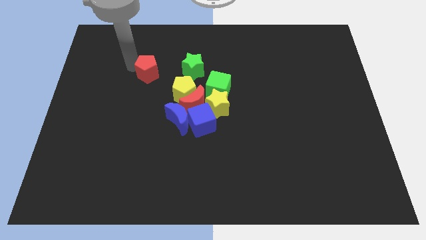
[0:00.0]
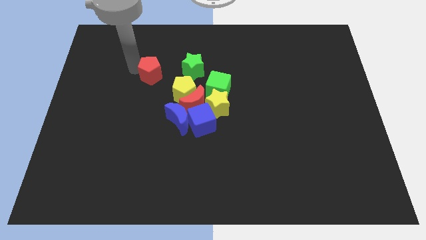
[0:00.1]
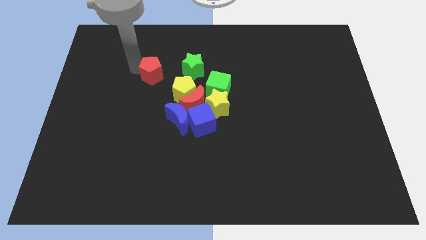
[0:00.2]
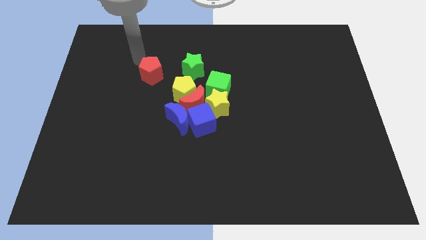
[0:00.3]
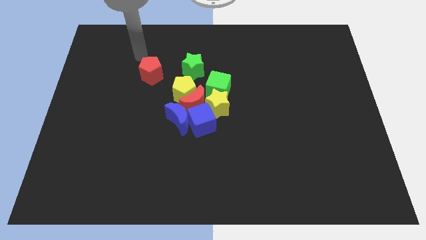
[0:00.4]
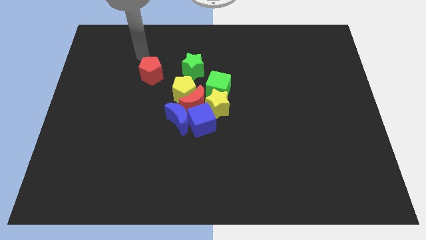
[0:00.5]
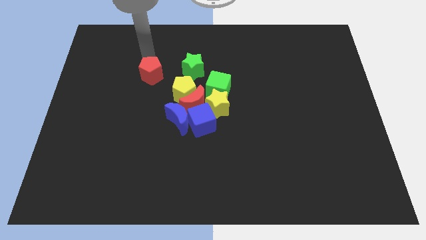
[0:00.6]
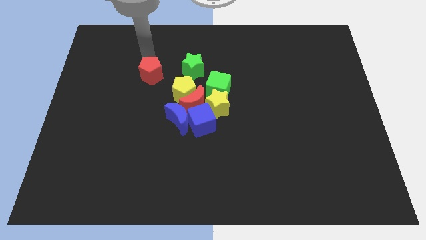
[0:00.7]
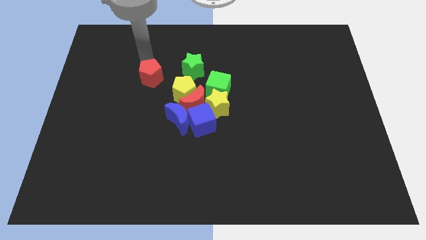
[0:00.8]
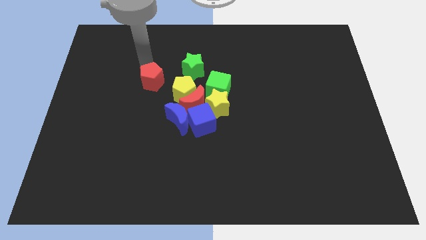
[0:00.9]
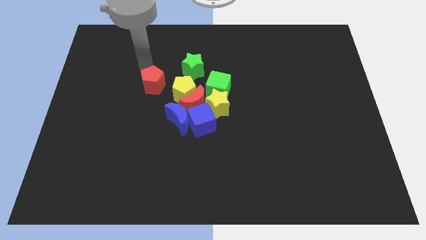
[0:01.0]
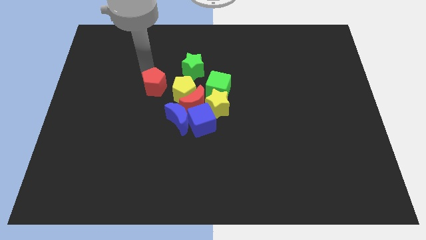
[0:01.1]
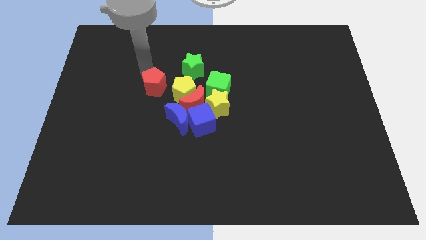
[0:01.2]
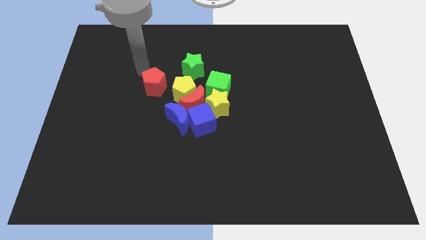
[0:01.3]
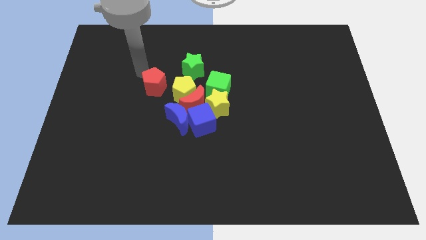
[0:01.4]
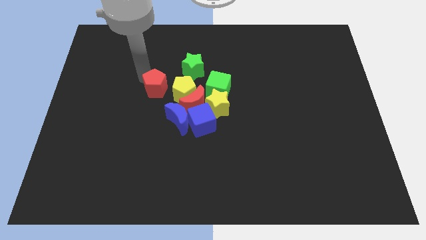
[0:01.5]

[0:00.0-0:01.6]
slide the red pentagon towards the left side of the yellow pentagon

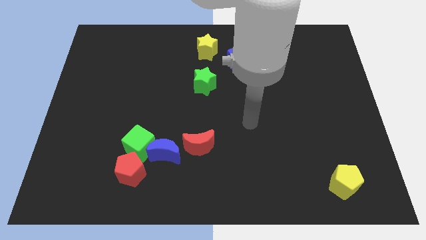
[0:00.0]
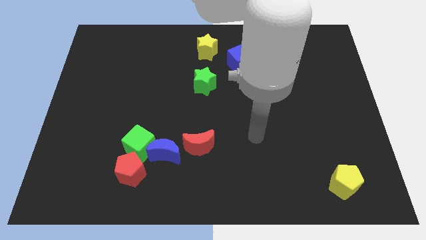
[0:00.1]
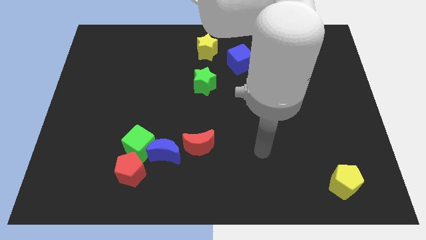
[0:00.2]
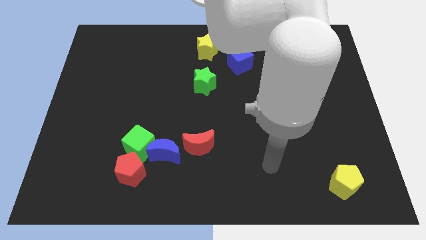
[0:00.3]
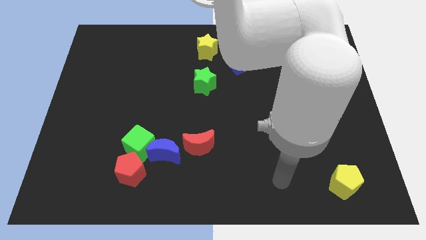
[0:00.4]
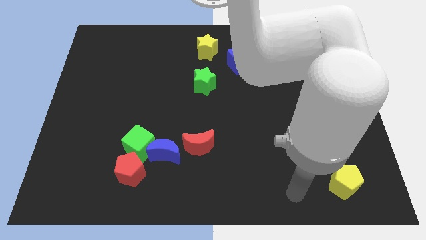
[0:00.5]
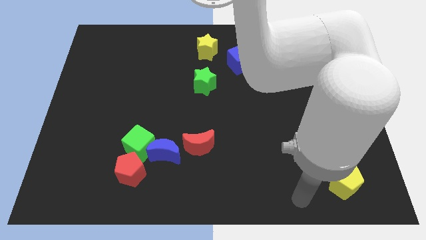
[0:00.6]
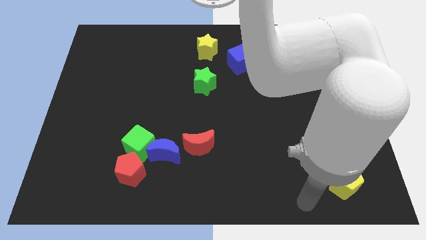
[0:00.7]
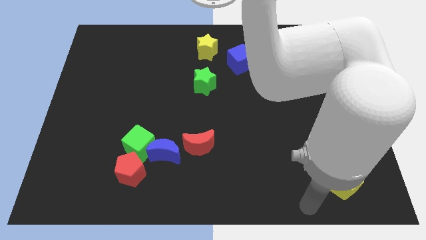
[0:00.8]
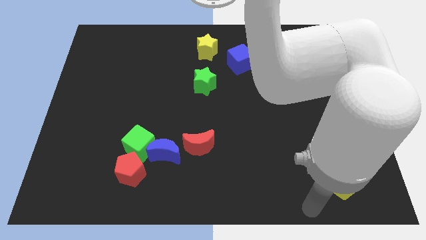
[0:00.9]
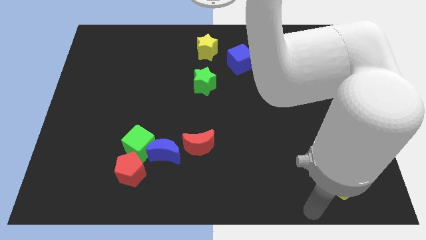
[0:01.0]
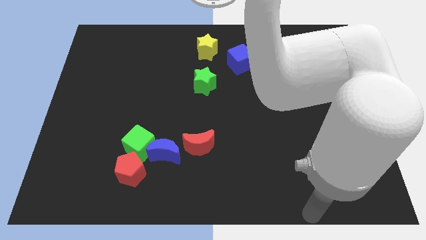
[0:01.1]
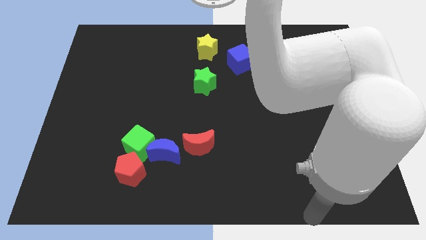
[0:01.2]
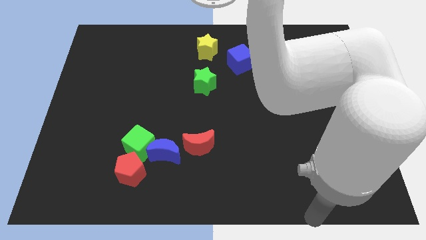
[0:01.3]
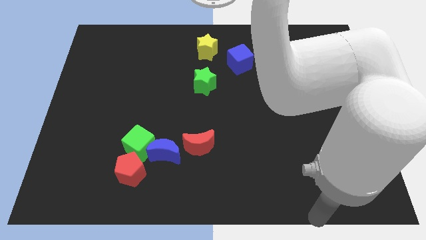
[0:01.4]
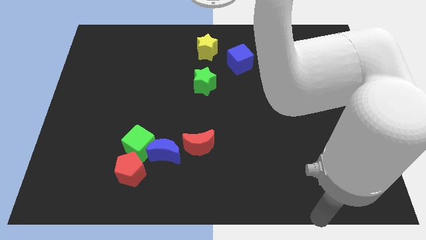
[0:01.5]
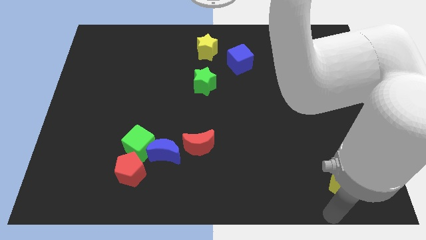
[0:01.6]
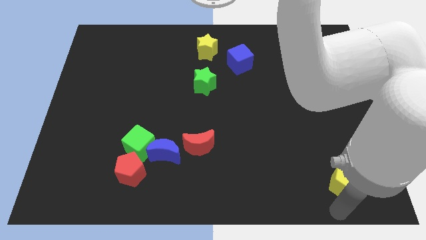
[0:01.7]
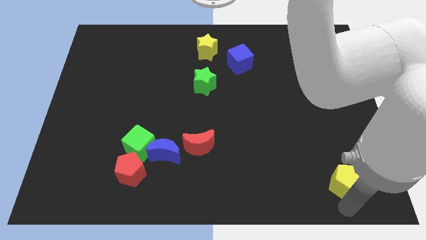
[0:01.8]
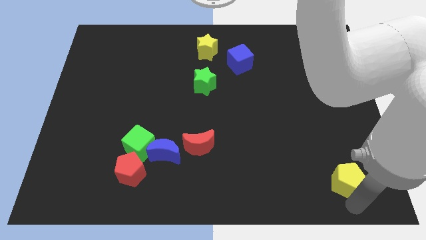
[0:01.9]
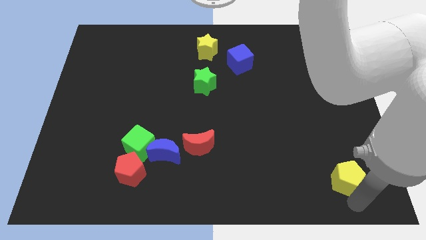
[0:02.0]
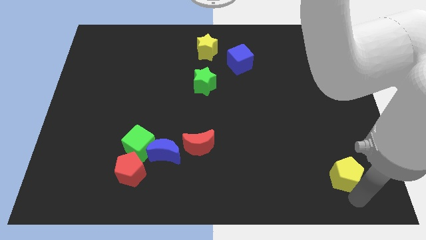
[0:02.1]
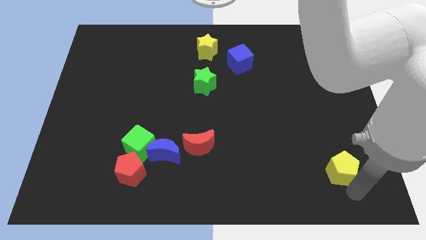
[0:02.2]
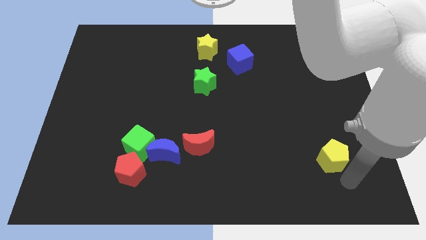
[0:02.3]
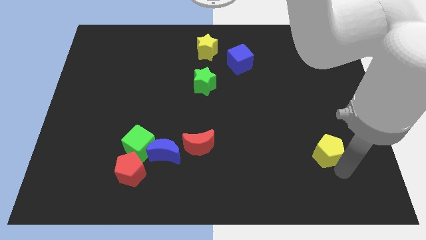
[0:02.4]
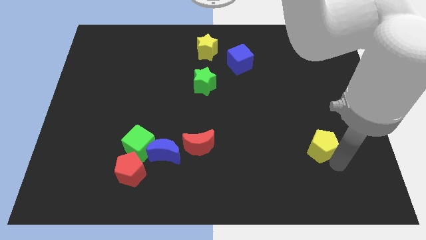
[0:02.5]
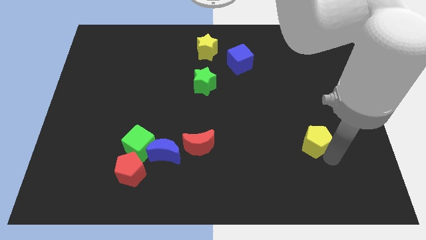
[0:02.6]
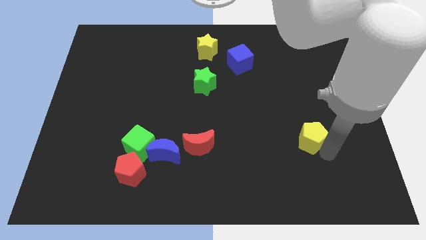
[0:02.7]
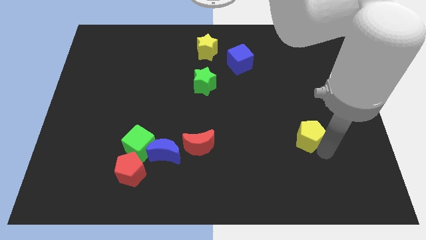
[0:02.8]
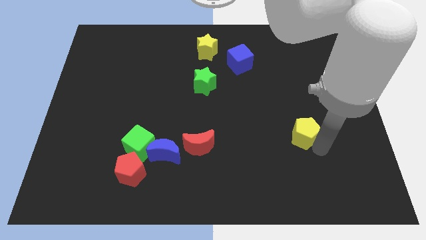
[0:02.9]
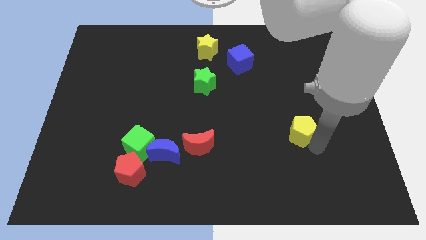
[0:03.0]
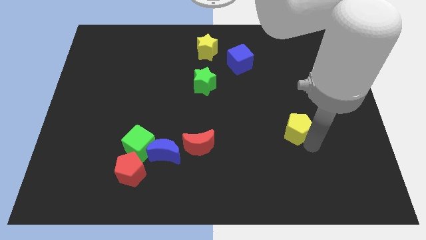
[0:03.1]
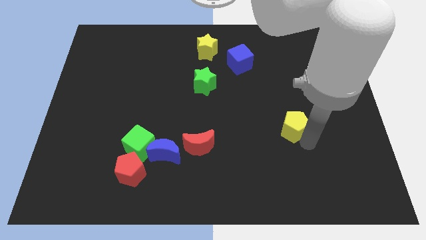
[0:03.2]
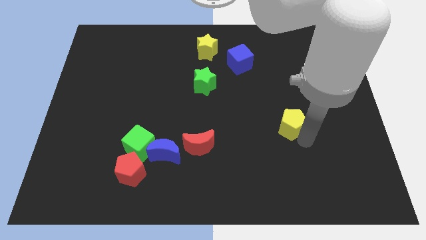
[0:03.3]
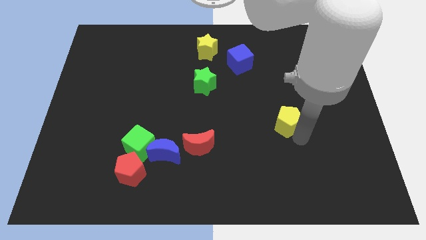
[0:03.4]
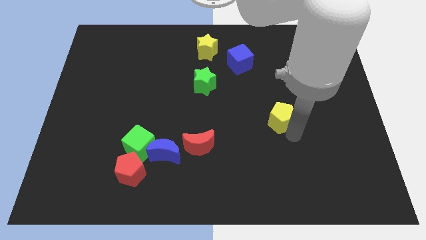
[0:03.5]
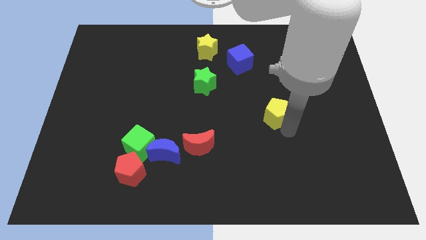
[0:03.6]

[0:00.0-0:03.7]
move yellow pentagon towards the blue cube

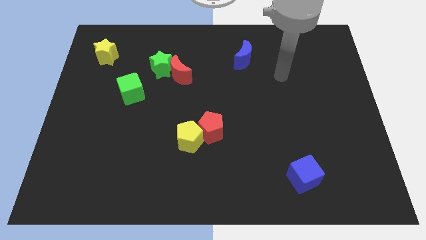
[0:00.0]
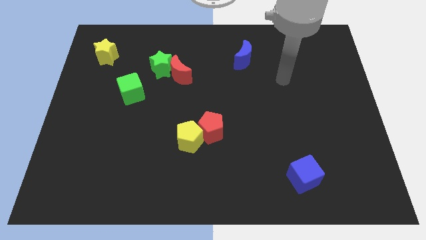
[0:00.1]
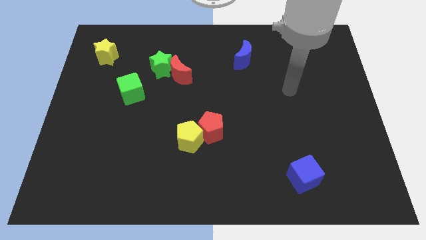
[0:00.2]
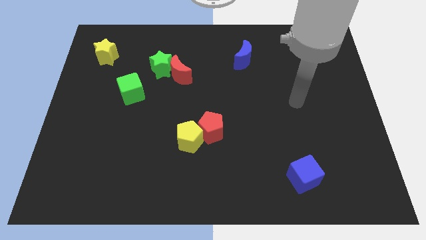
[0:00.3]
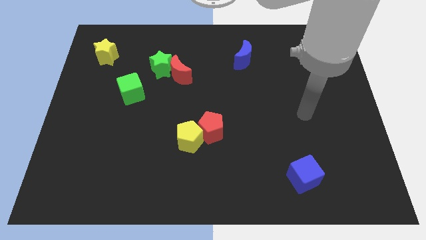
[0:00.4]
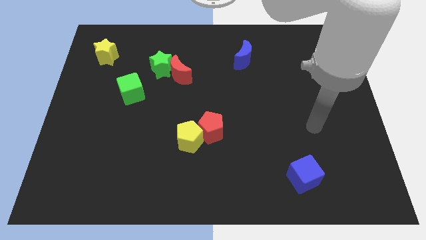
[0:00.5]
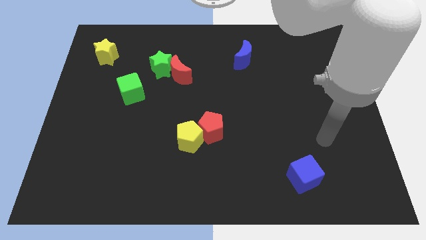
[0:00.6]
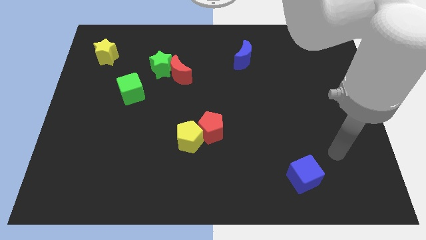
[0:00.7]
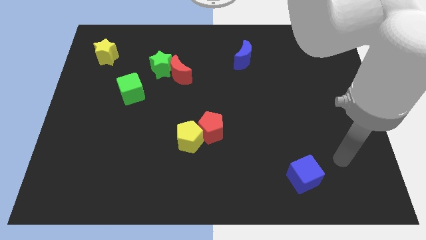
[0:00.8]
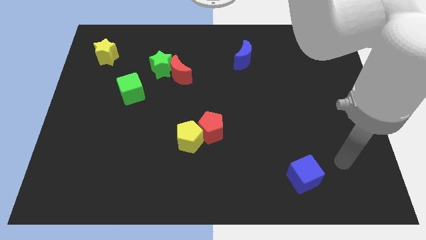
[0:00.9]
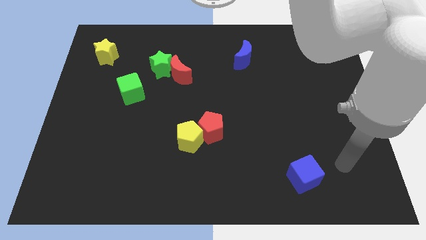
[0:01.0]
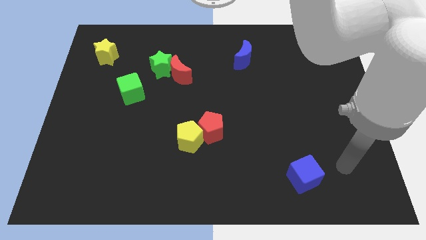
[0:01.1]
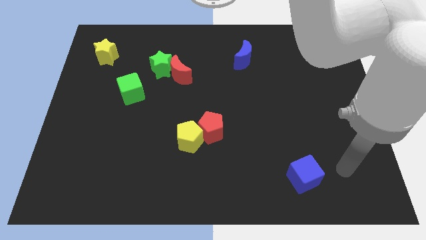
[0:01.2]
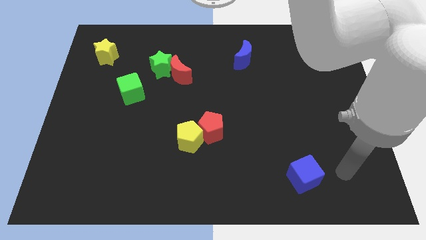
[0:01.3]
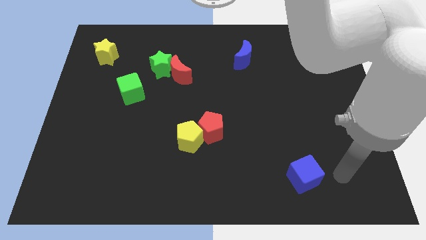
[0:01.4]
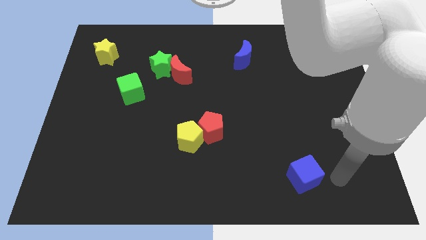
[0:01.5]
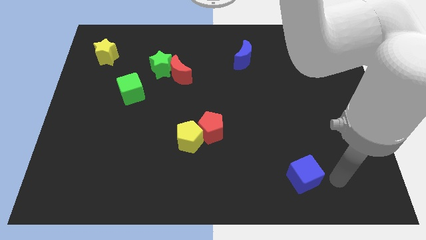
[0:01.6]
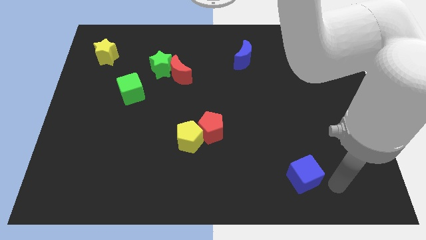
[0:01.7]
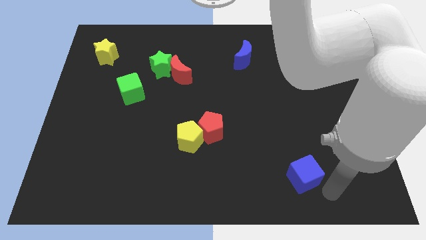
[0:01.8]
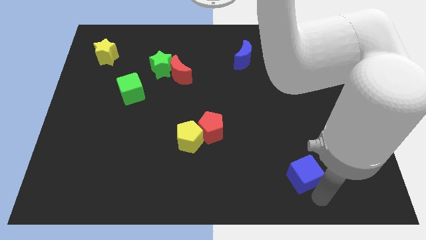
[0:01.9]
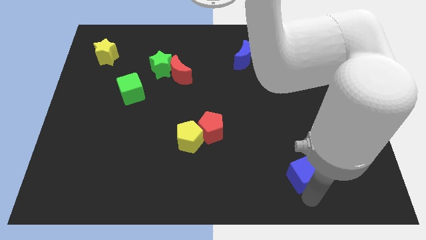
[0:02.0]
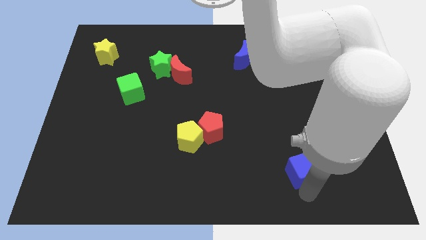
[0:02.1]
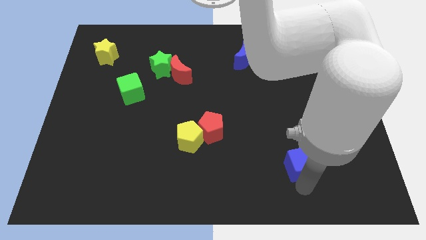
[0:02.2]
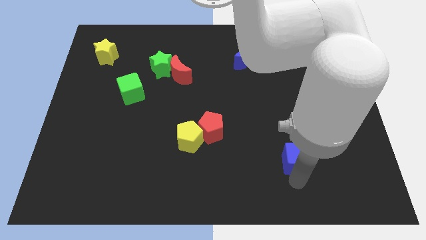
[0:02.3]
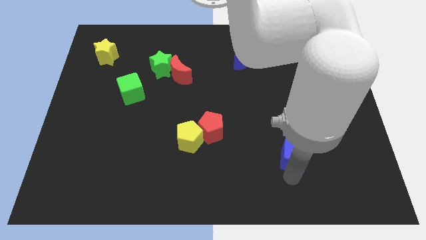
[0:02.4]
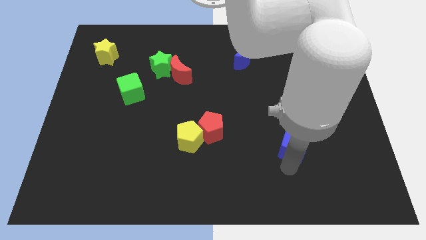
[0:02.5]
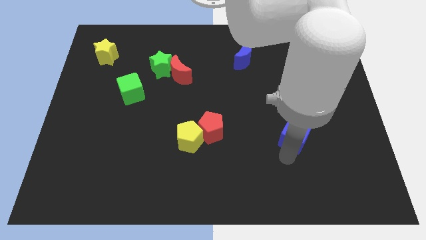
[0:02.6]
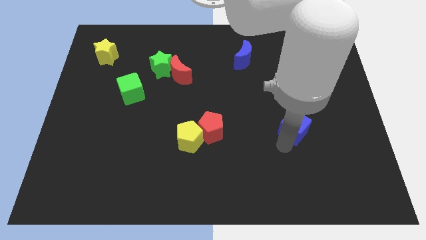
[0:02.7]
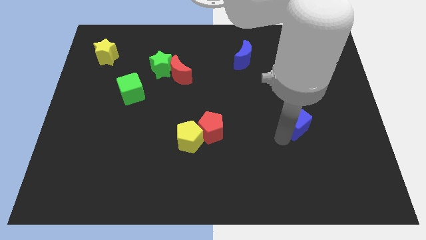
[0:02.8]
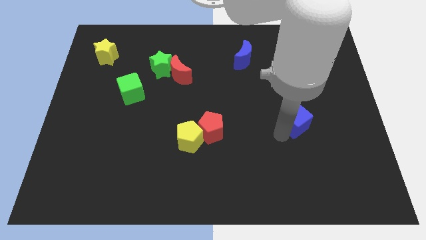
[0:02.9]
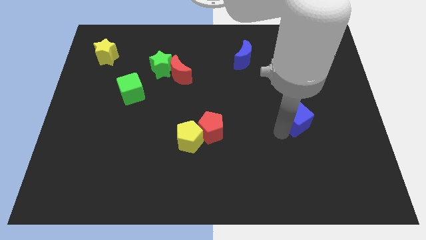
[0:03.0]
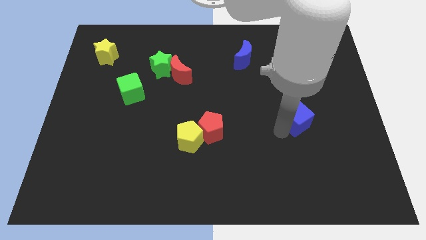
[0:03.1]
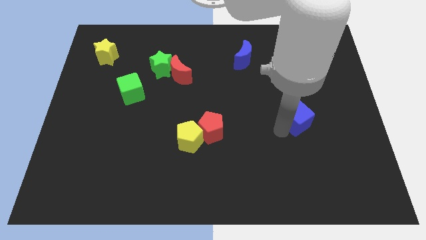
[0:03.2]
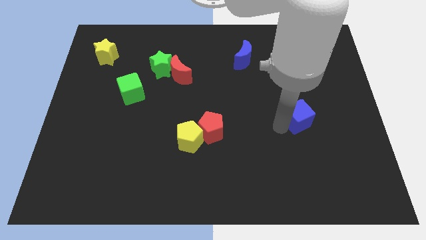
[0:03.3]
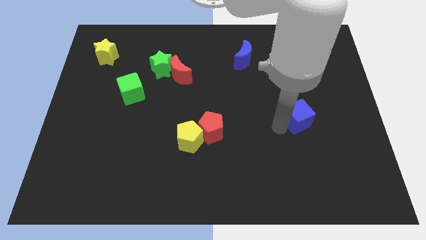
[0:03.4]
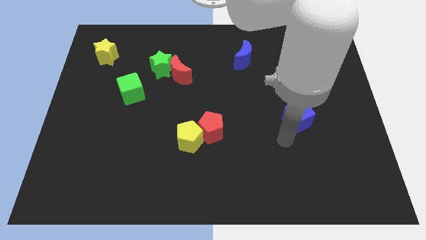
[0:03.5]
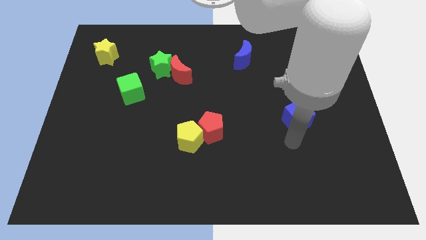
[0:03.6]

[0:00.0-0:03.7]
push the blue cube upward

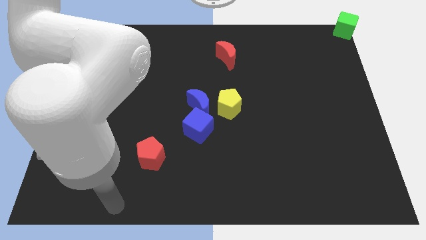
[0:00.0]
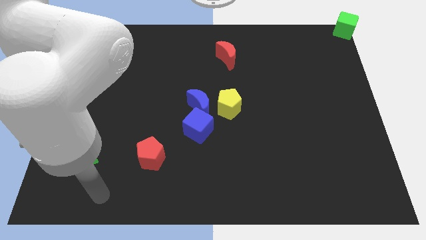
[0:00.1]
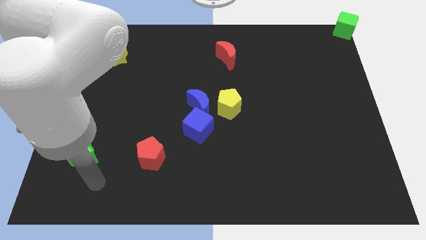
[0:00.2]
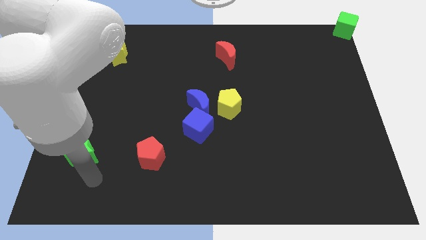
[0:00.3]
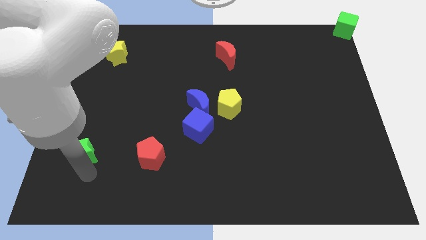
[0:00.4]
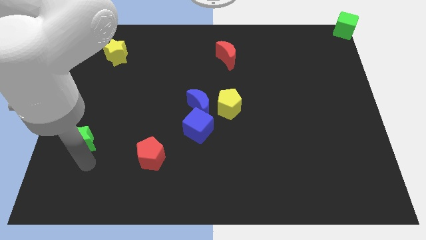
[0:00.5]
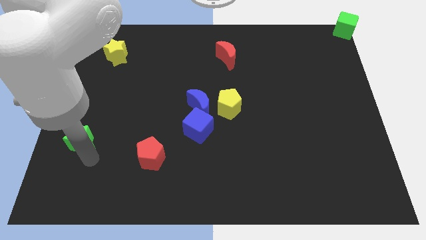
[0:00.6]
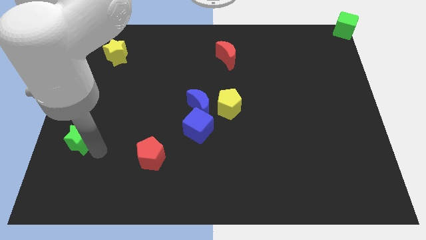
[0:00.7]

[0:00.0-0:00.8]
push the green star to the top of the board
